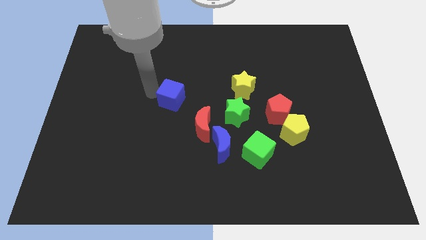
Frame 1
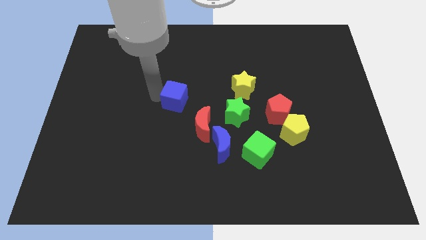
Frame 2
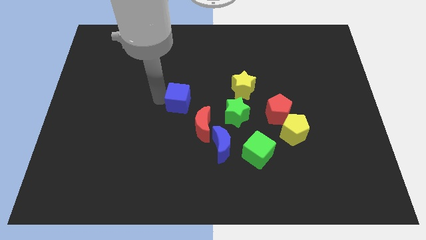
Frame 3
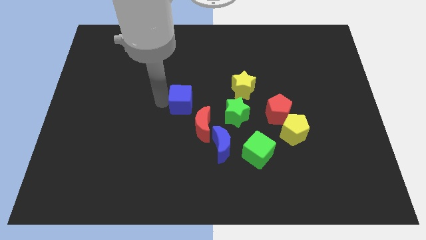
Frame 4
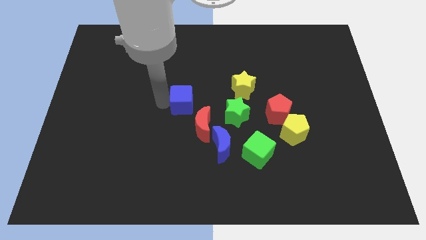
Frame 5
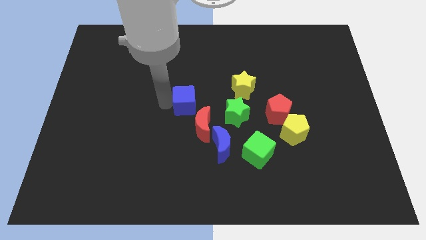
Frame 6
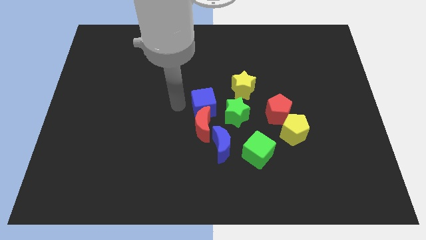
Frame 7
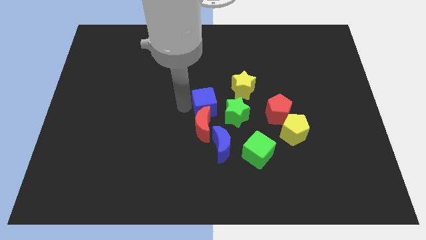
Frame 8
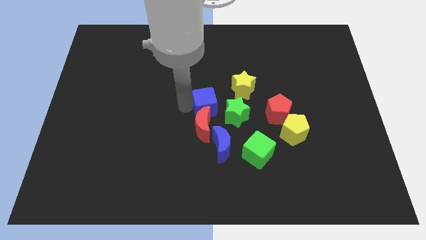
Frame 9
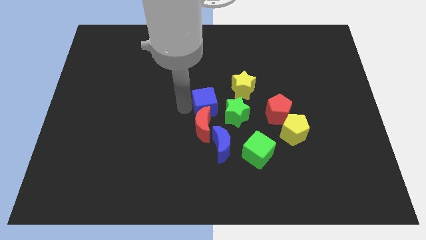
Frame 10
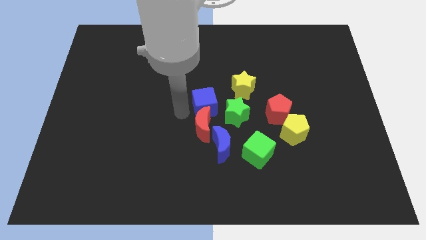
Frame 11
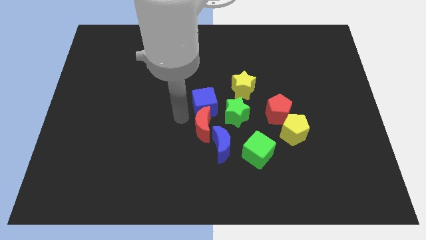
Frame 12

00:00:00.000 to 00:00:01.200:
place the blue cube above the red moon

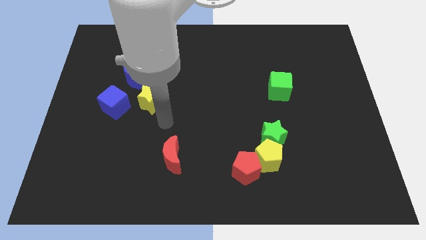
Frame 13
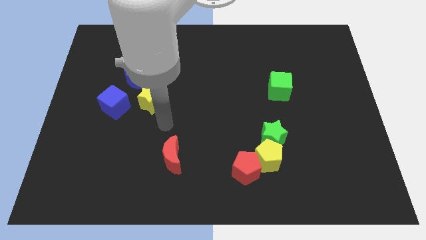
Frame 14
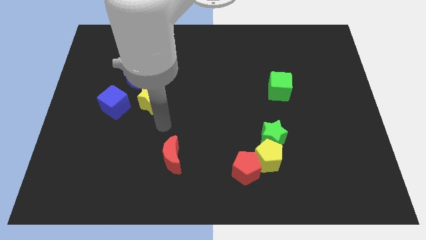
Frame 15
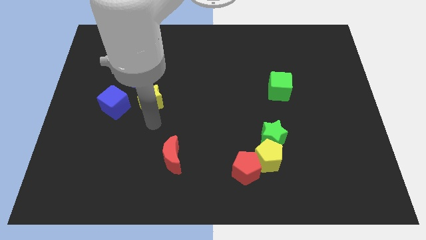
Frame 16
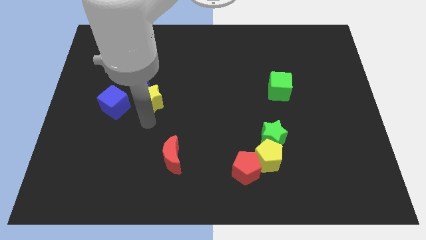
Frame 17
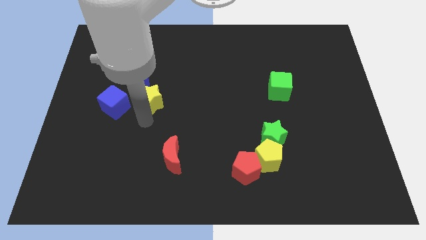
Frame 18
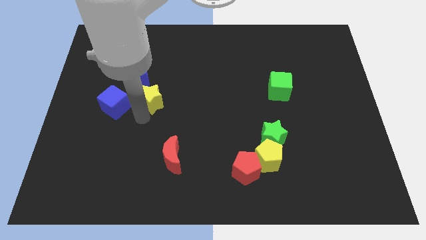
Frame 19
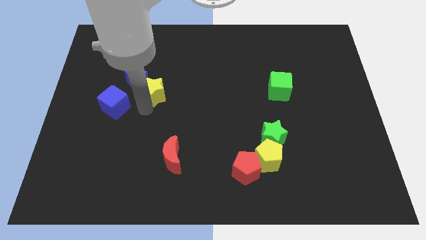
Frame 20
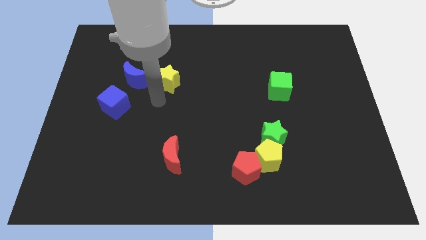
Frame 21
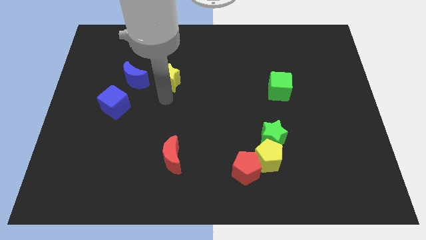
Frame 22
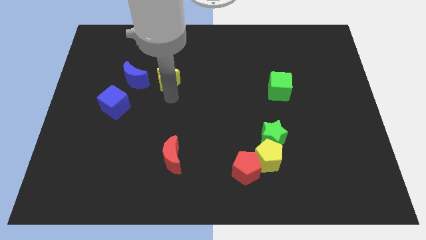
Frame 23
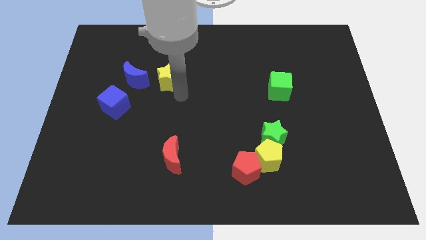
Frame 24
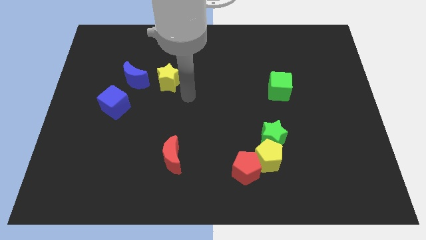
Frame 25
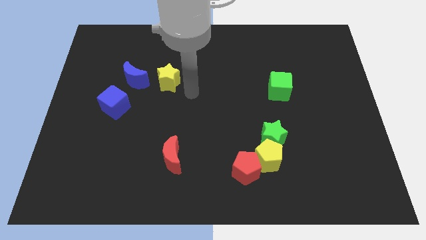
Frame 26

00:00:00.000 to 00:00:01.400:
place the yellow star to the right side of the blue crescent

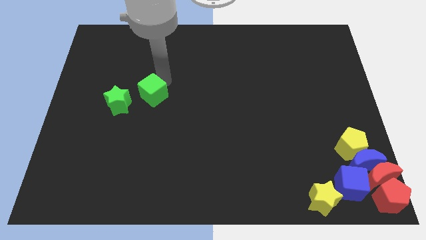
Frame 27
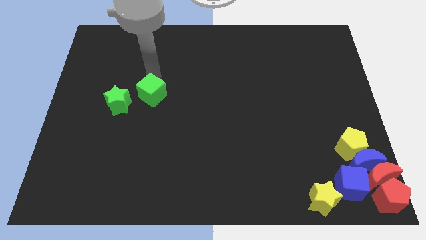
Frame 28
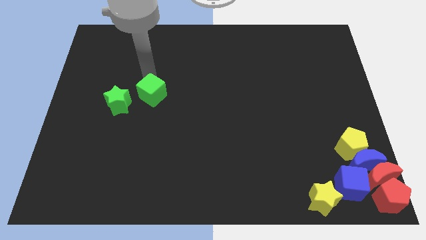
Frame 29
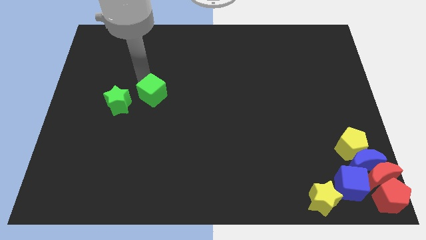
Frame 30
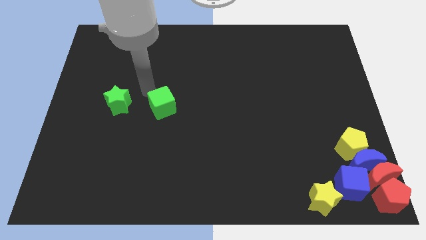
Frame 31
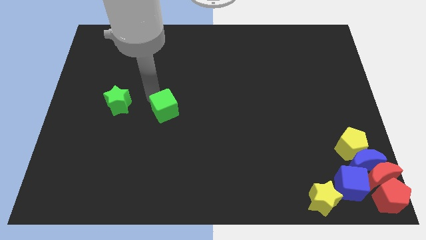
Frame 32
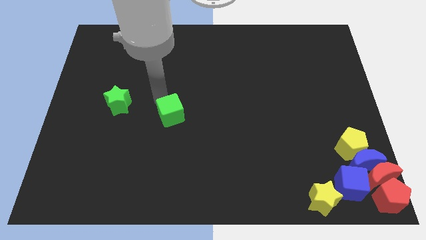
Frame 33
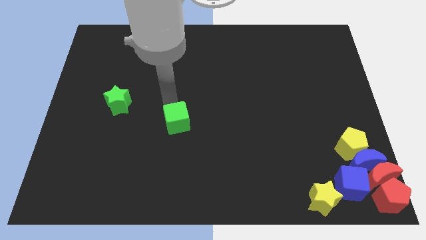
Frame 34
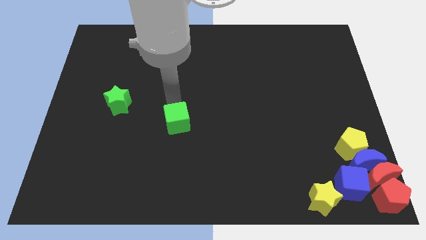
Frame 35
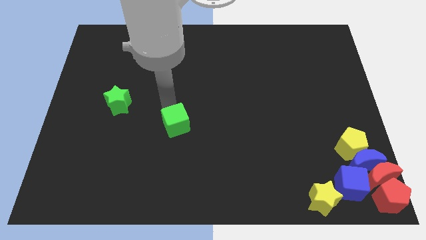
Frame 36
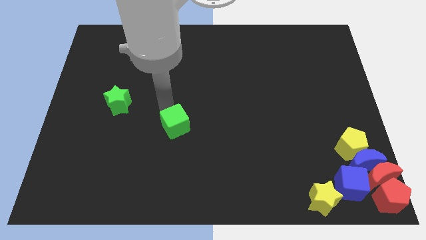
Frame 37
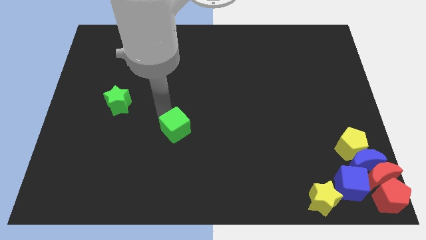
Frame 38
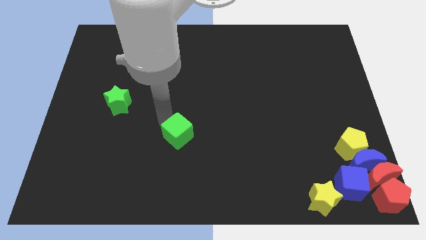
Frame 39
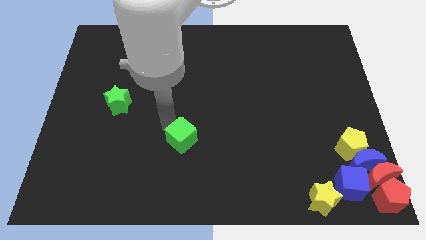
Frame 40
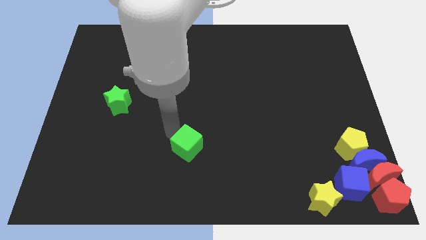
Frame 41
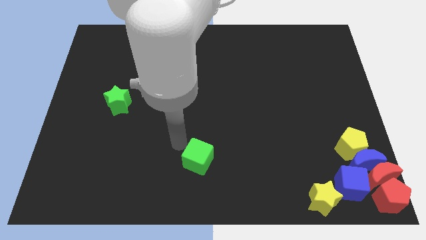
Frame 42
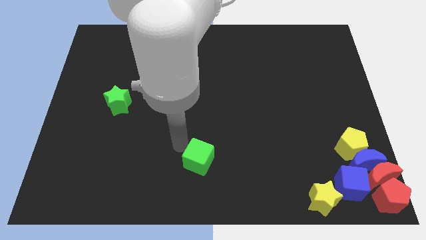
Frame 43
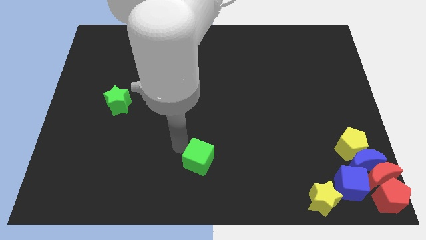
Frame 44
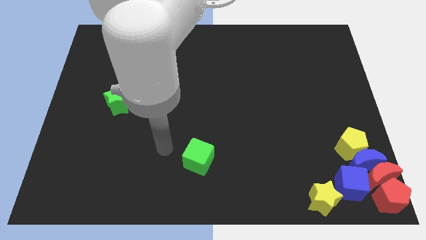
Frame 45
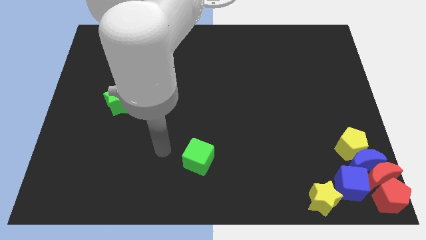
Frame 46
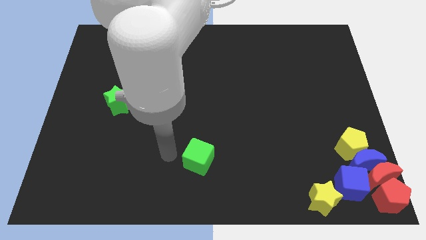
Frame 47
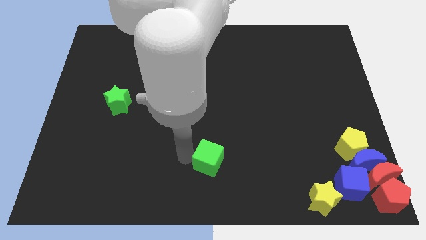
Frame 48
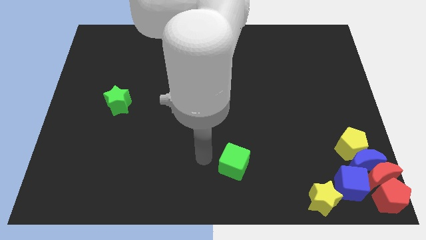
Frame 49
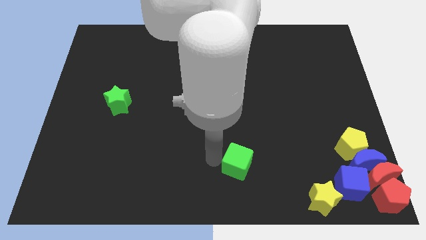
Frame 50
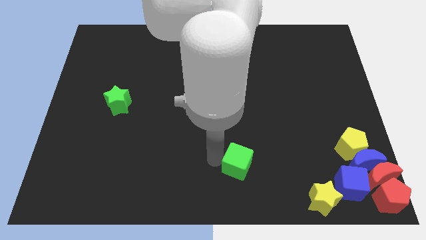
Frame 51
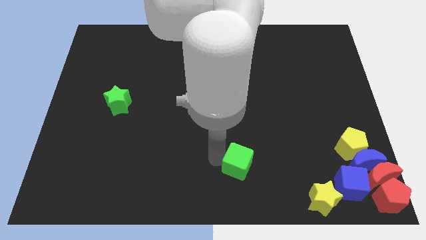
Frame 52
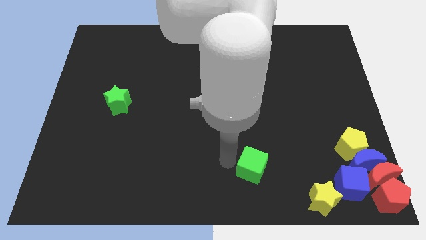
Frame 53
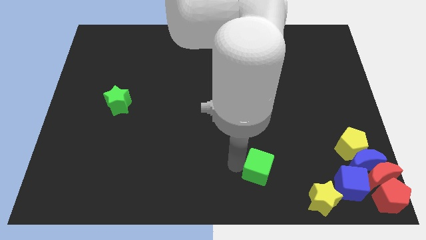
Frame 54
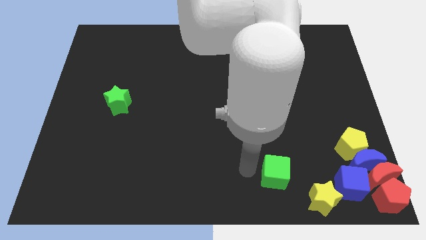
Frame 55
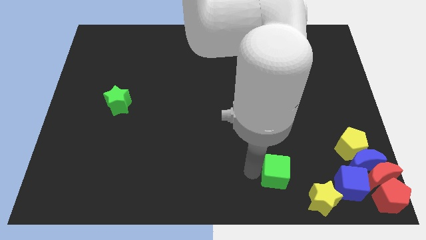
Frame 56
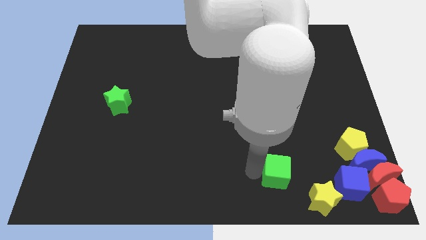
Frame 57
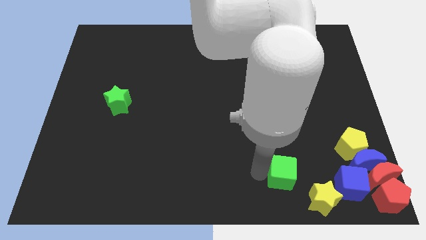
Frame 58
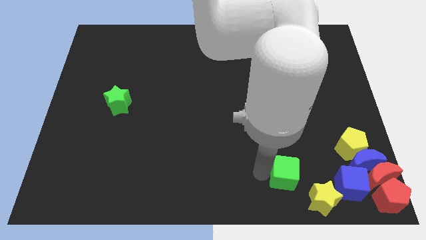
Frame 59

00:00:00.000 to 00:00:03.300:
move the green cube to the top left side of the yellow star

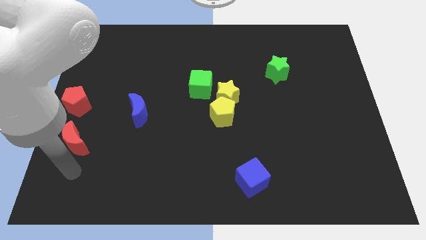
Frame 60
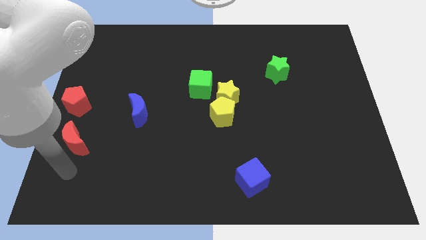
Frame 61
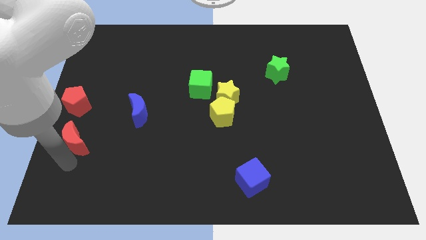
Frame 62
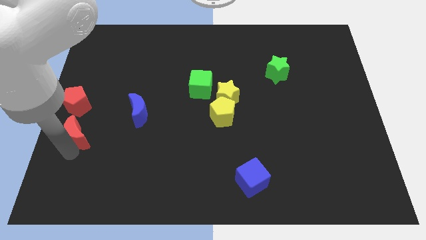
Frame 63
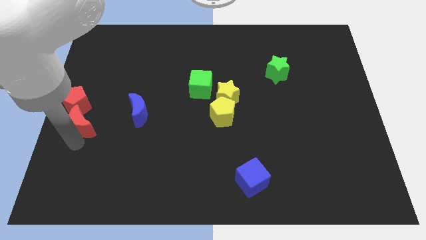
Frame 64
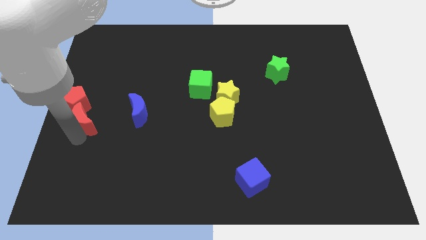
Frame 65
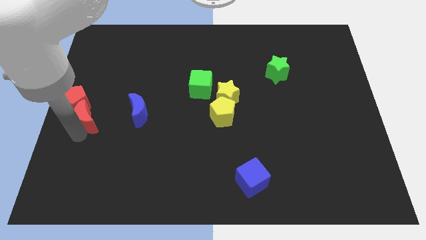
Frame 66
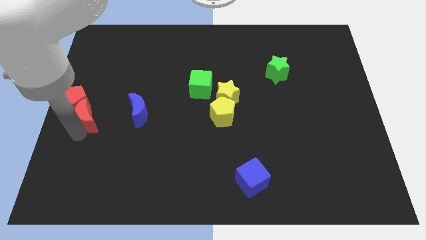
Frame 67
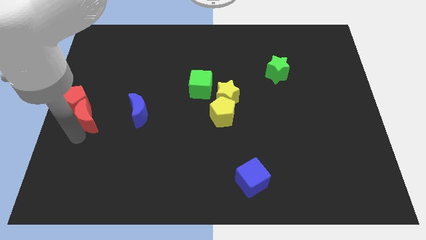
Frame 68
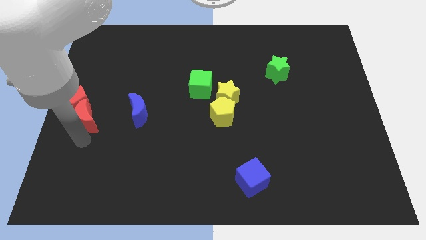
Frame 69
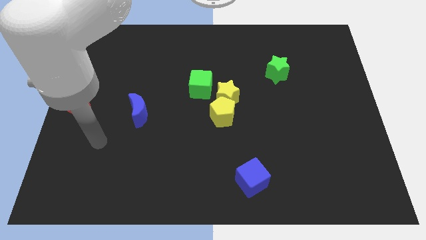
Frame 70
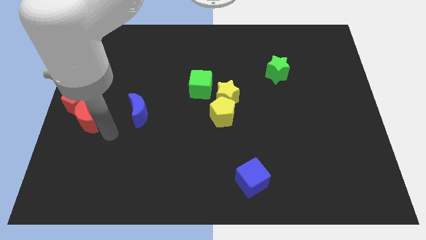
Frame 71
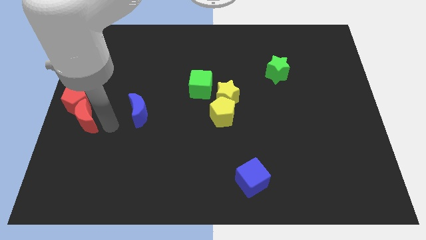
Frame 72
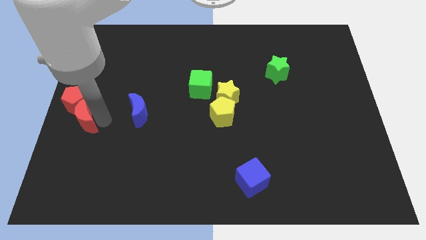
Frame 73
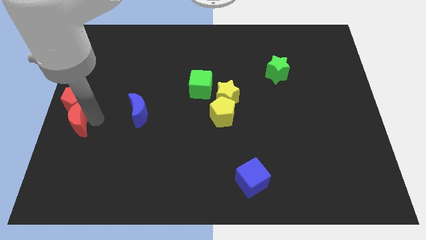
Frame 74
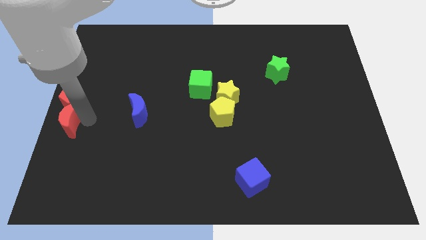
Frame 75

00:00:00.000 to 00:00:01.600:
push red crescent below red pentagon

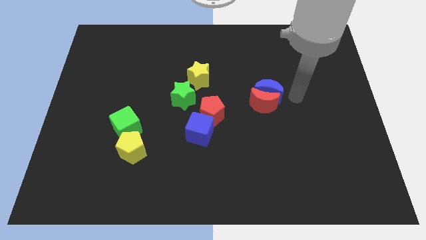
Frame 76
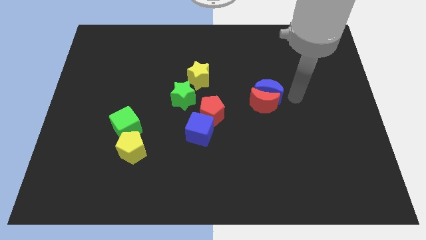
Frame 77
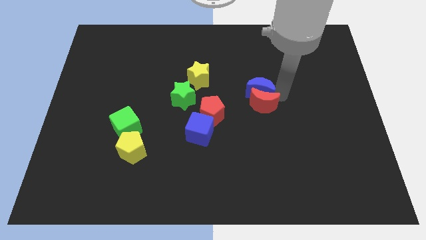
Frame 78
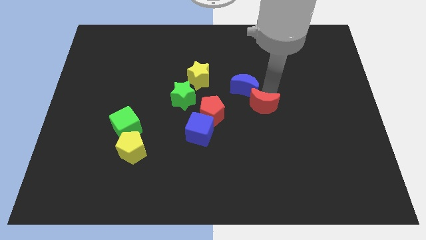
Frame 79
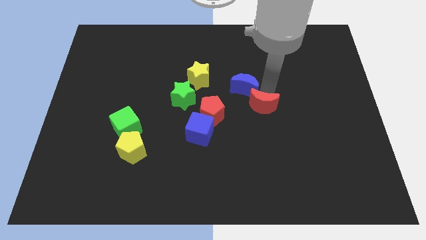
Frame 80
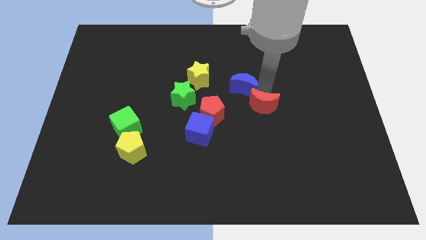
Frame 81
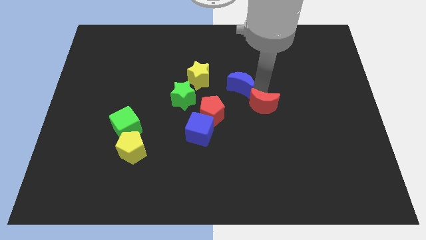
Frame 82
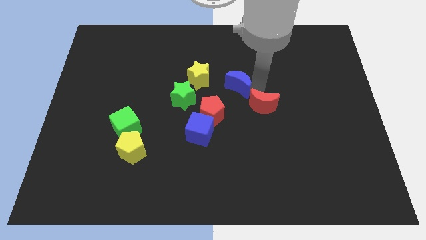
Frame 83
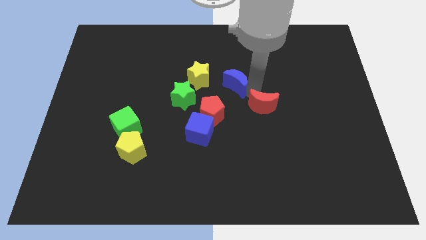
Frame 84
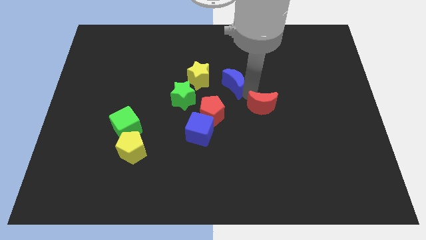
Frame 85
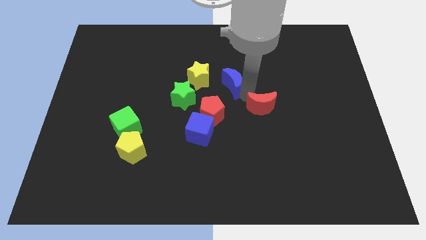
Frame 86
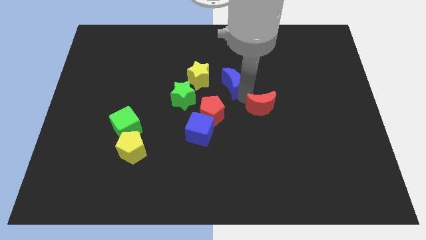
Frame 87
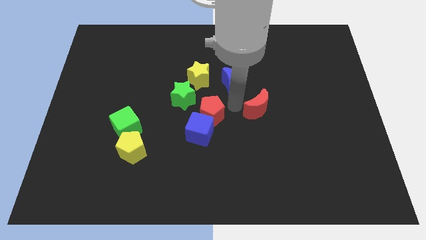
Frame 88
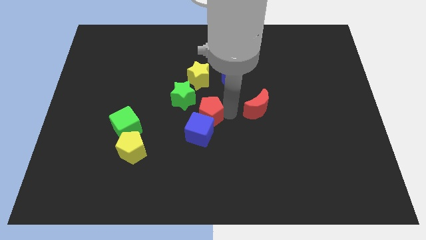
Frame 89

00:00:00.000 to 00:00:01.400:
separate the blue crescent from the red crescent
